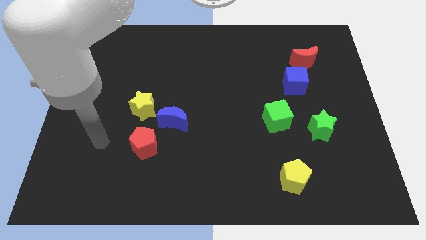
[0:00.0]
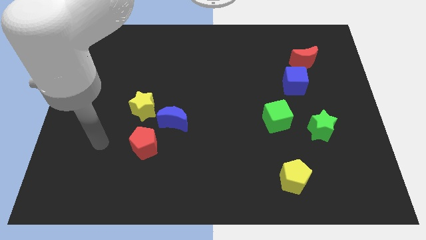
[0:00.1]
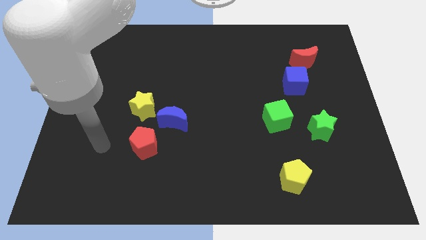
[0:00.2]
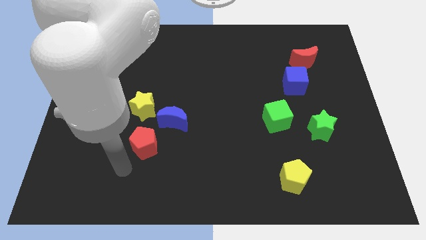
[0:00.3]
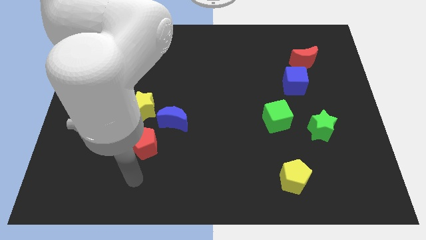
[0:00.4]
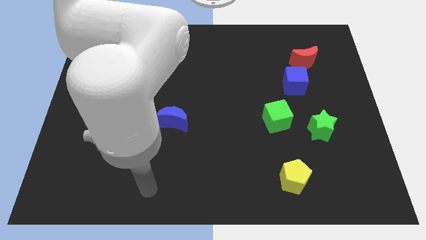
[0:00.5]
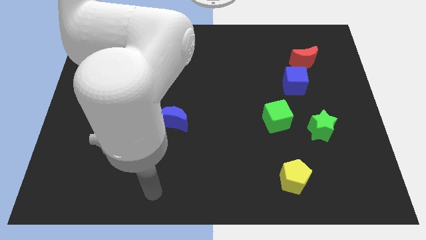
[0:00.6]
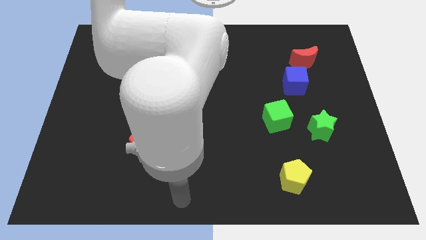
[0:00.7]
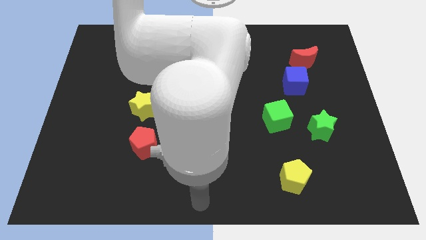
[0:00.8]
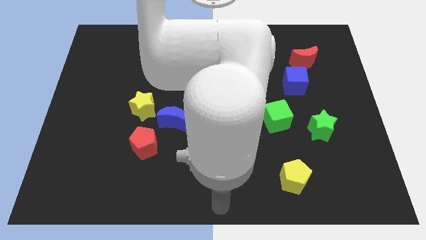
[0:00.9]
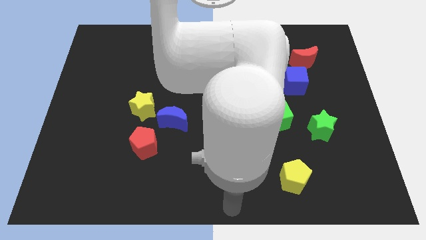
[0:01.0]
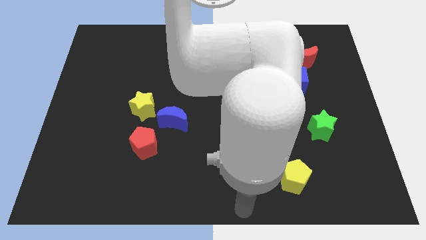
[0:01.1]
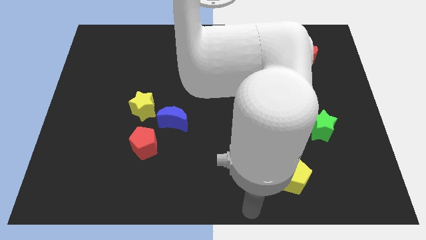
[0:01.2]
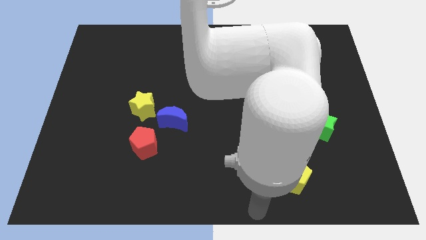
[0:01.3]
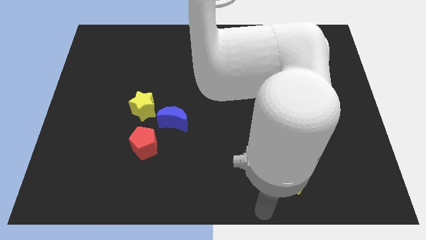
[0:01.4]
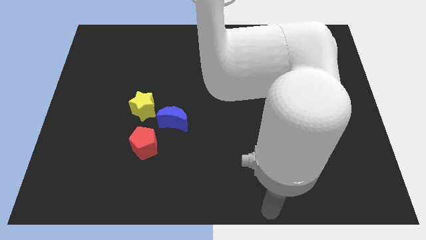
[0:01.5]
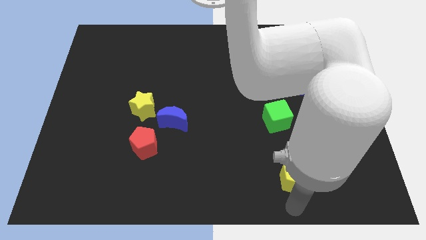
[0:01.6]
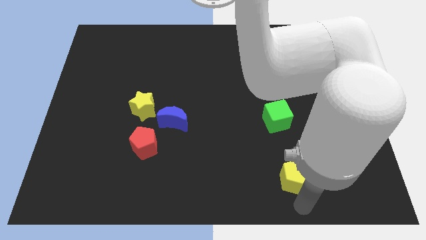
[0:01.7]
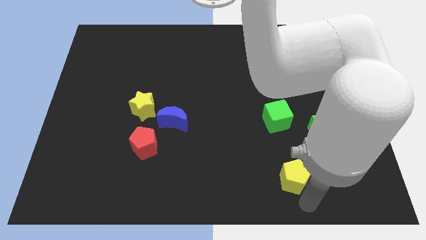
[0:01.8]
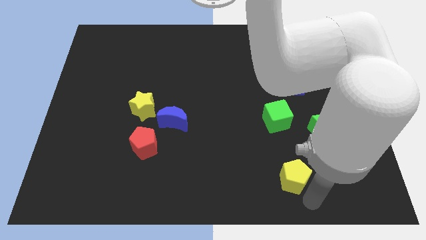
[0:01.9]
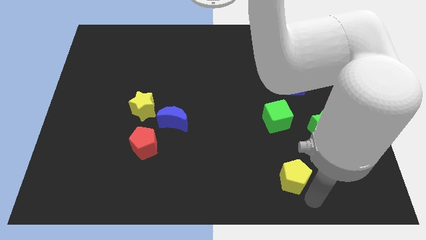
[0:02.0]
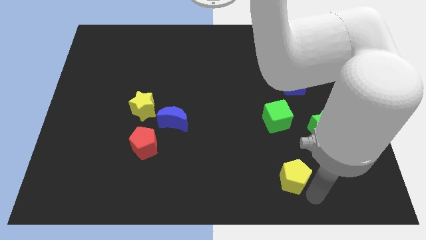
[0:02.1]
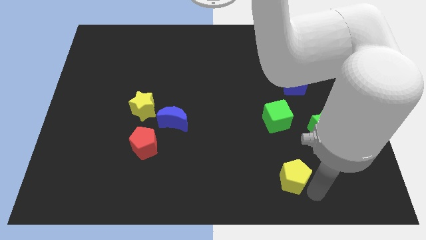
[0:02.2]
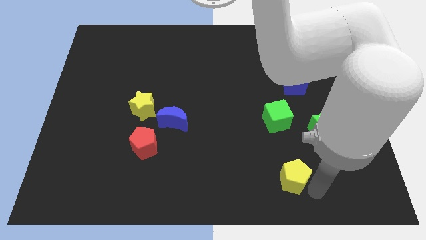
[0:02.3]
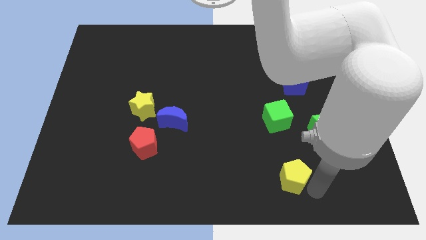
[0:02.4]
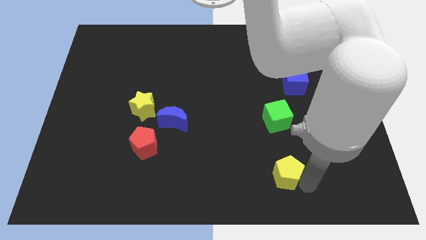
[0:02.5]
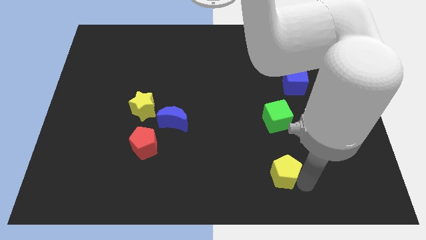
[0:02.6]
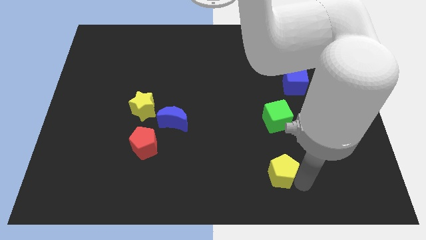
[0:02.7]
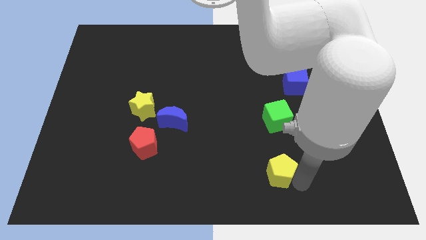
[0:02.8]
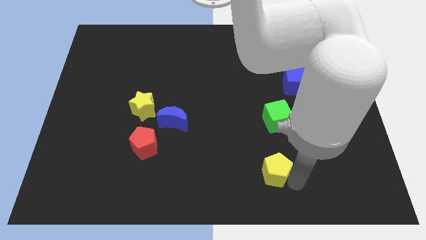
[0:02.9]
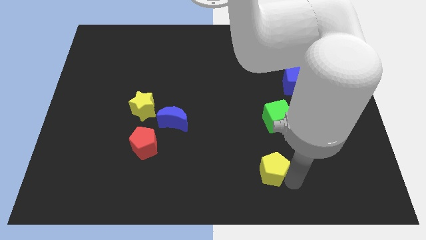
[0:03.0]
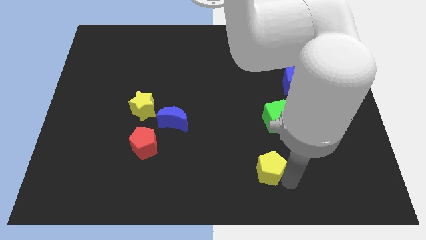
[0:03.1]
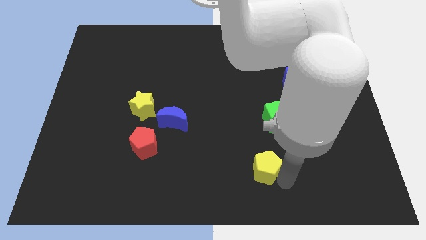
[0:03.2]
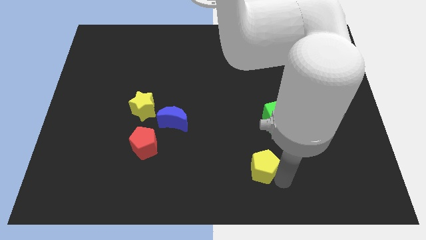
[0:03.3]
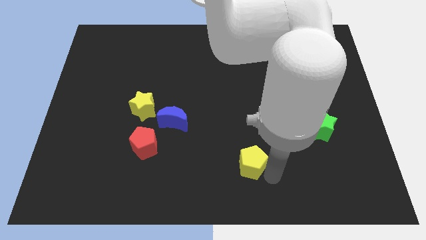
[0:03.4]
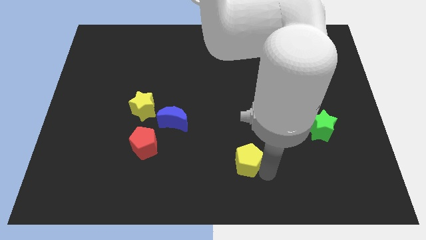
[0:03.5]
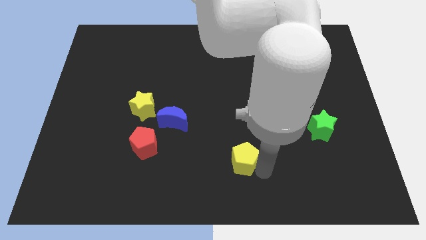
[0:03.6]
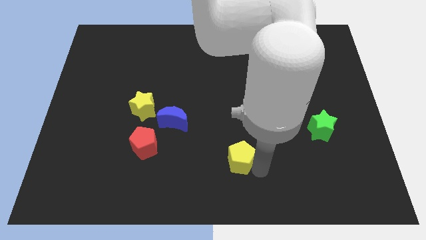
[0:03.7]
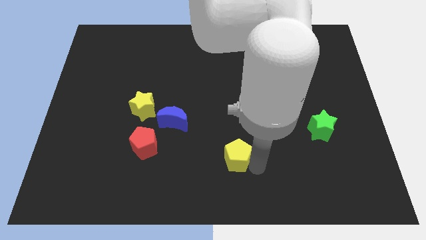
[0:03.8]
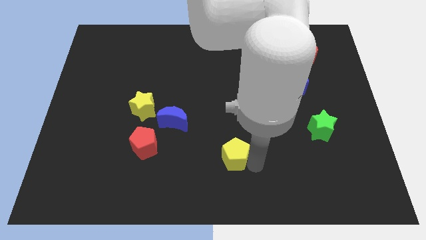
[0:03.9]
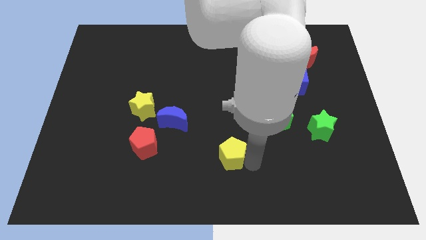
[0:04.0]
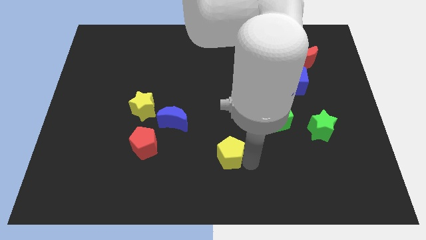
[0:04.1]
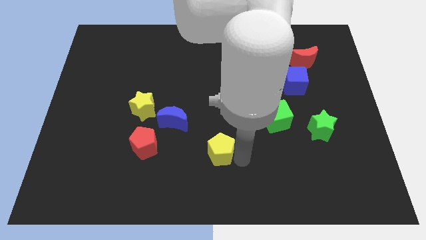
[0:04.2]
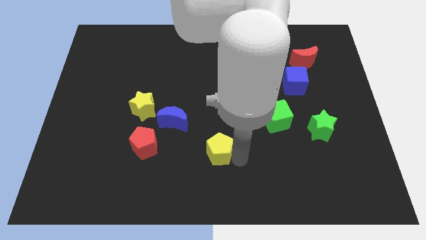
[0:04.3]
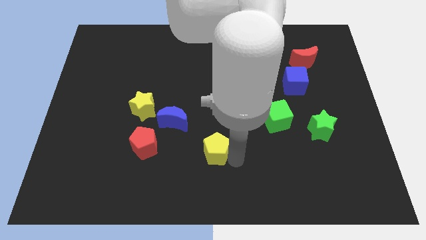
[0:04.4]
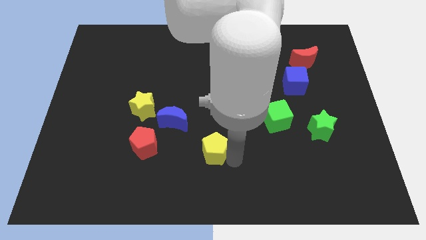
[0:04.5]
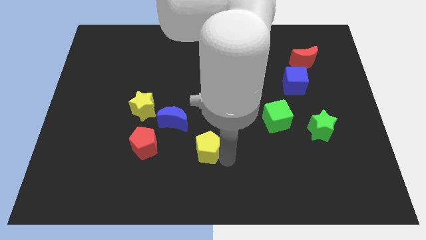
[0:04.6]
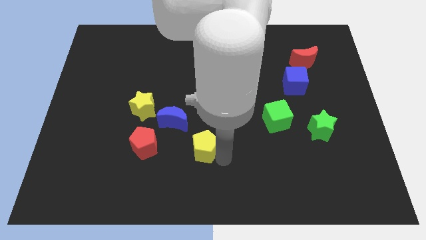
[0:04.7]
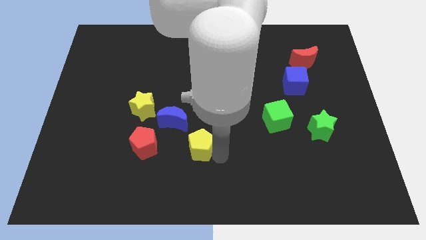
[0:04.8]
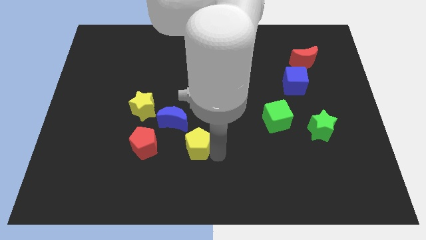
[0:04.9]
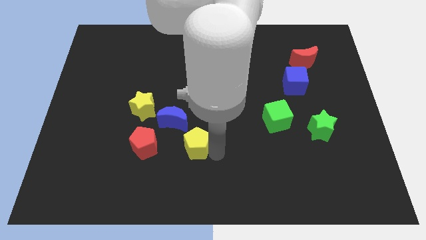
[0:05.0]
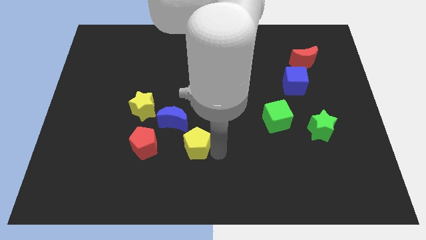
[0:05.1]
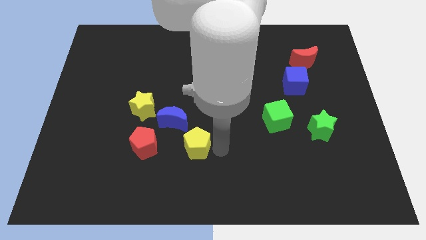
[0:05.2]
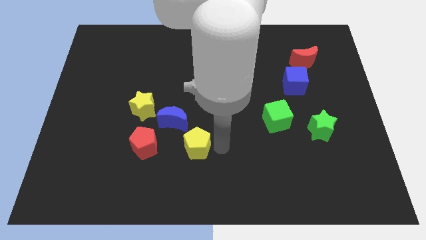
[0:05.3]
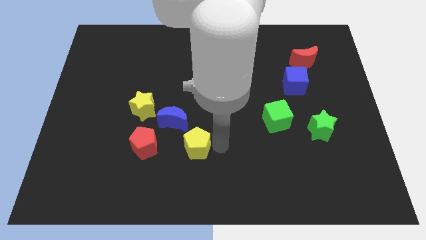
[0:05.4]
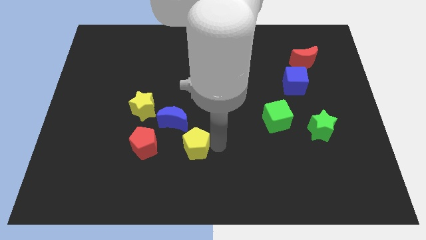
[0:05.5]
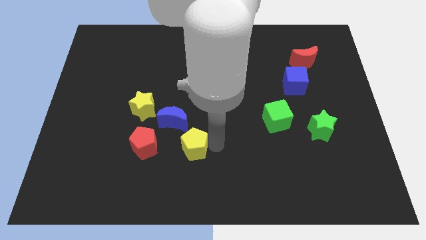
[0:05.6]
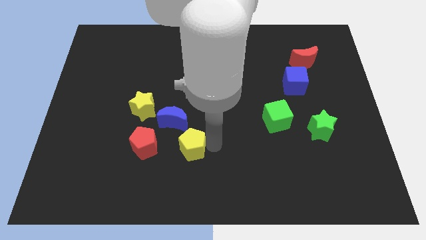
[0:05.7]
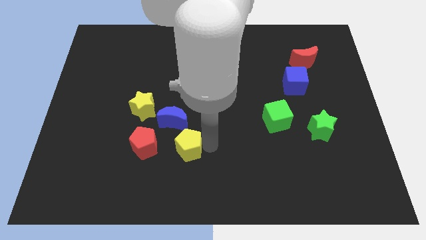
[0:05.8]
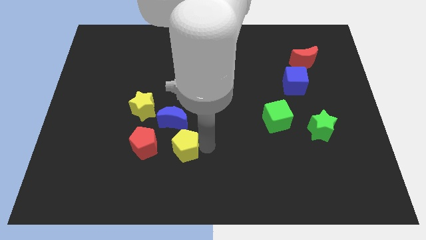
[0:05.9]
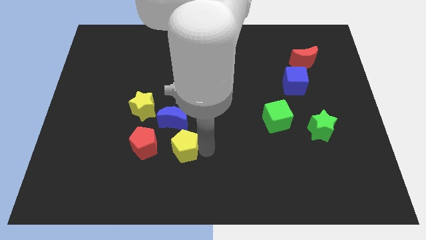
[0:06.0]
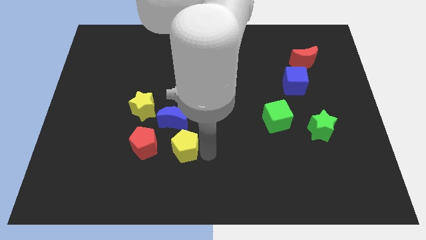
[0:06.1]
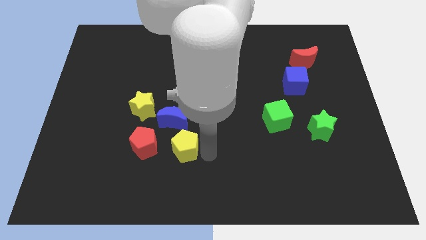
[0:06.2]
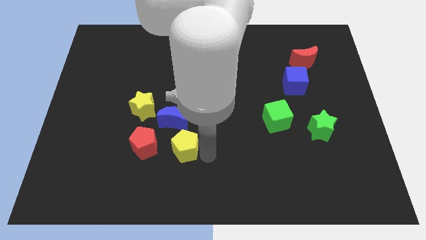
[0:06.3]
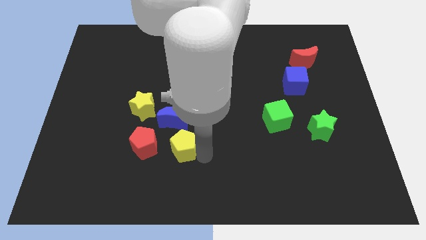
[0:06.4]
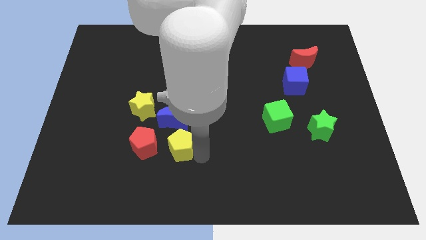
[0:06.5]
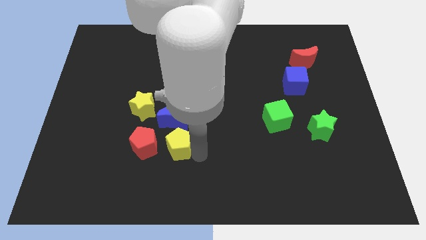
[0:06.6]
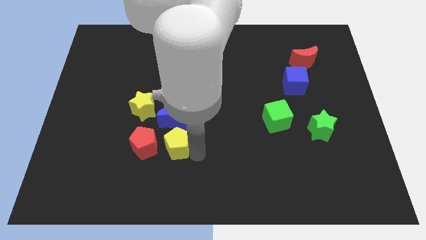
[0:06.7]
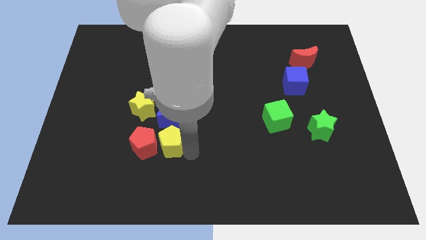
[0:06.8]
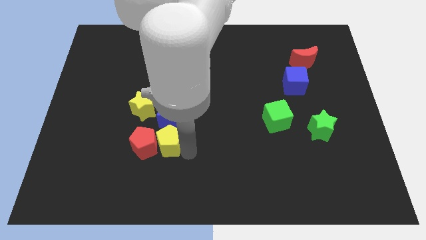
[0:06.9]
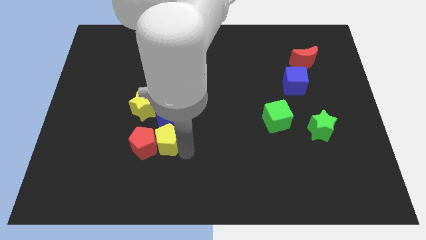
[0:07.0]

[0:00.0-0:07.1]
push the yellow pentagon towards the red pentagon

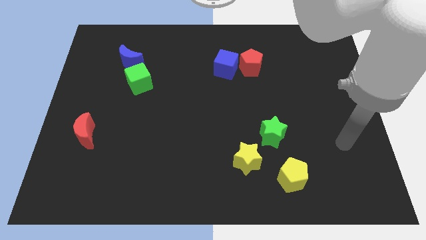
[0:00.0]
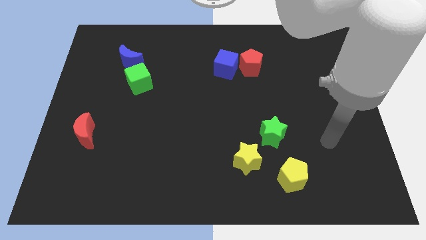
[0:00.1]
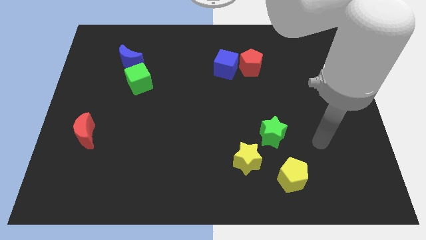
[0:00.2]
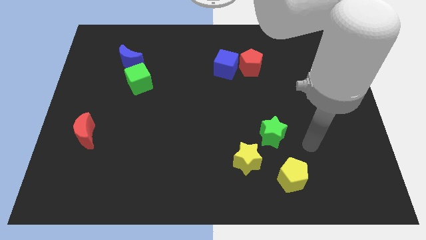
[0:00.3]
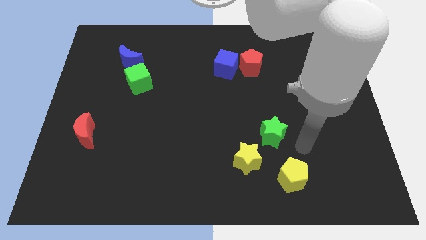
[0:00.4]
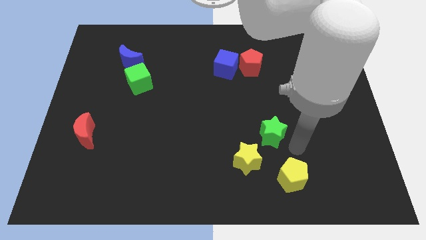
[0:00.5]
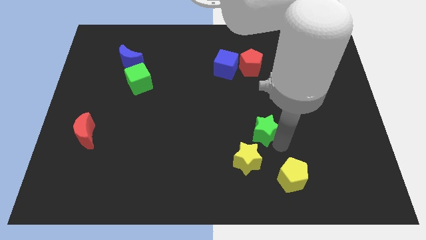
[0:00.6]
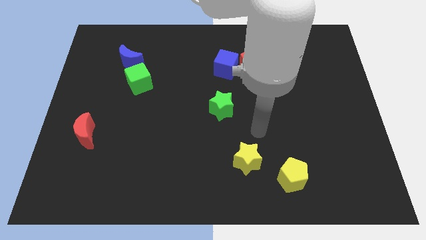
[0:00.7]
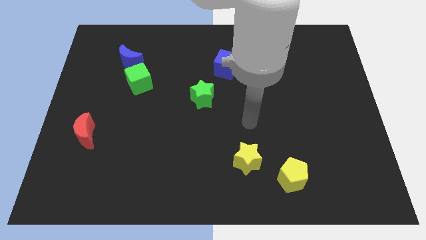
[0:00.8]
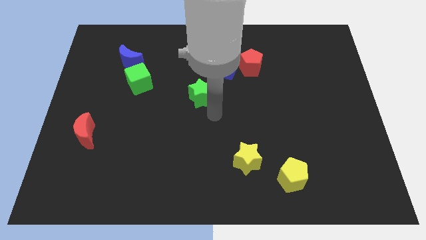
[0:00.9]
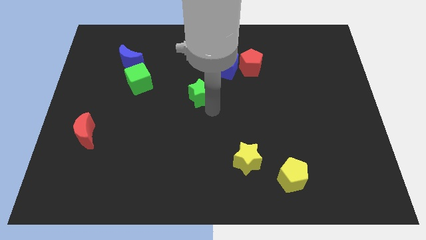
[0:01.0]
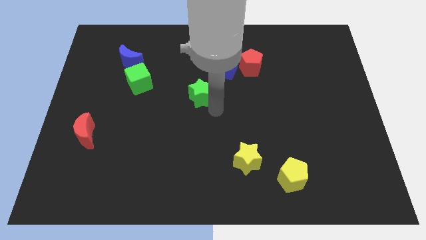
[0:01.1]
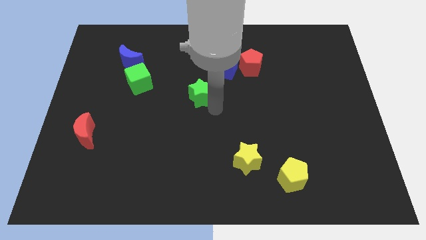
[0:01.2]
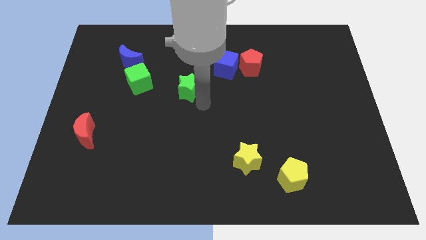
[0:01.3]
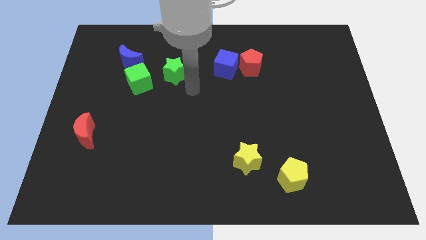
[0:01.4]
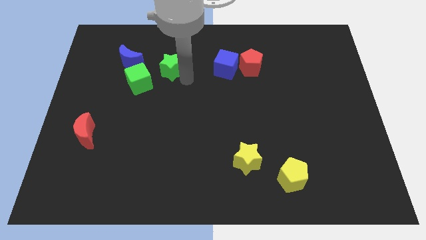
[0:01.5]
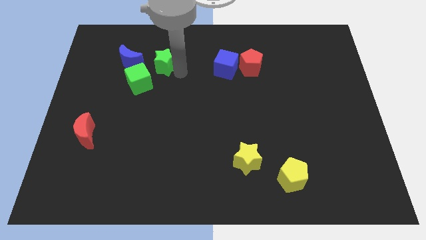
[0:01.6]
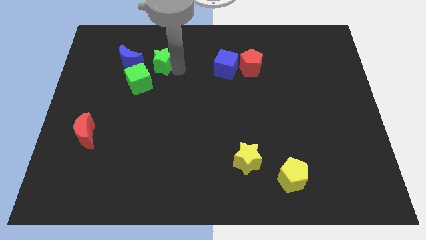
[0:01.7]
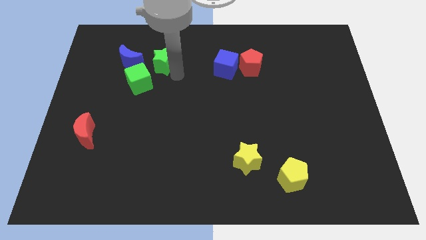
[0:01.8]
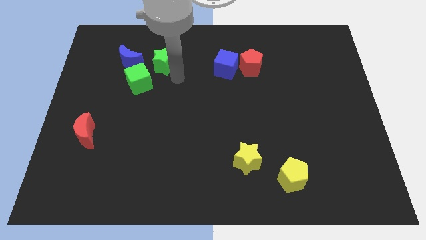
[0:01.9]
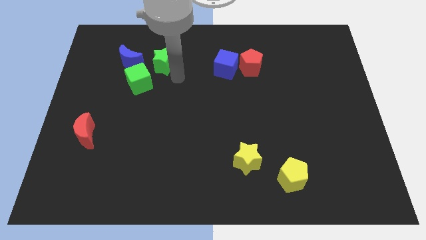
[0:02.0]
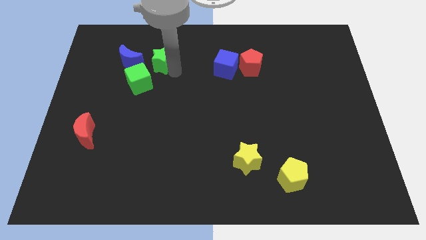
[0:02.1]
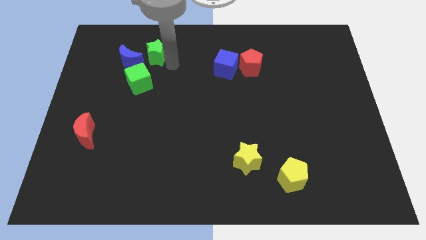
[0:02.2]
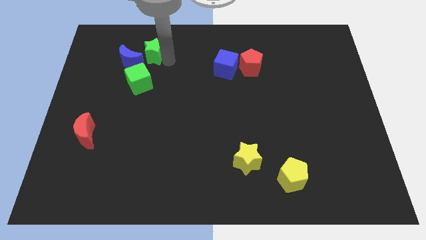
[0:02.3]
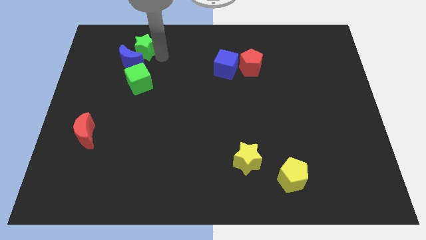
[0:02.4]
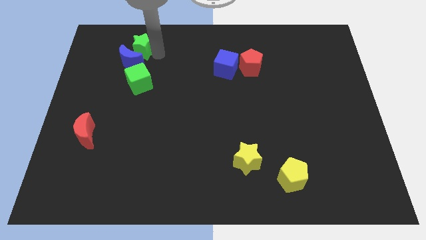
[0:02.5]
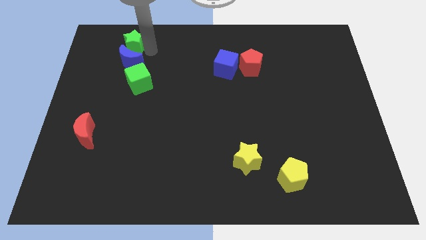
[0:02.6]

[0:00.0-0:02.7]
put the green star close to the blue moon
